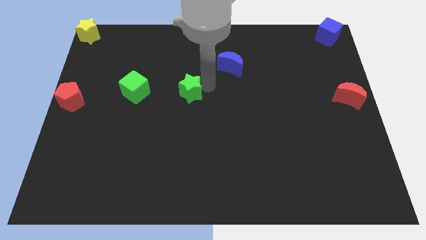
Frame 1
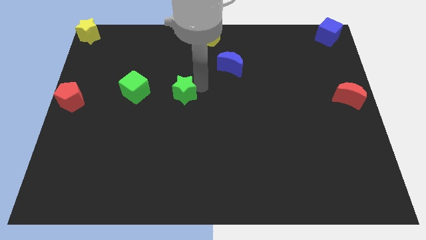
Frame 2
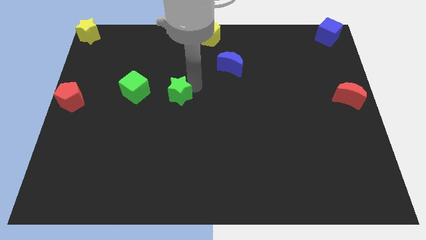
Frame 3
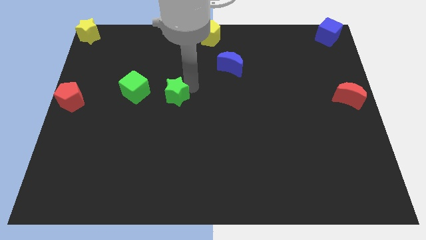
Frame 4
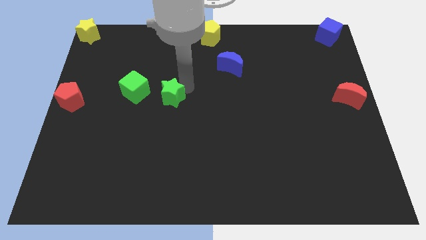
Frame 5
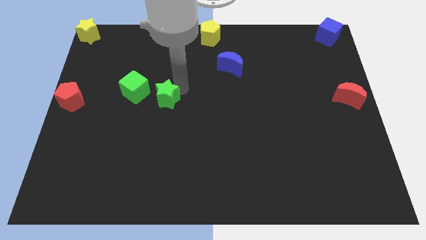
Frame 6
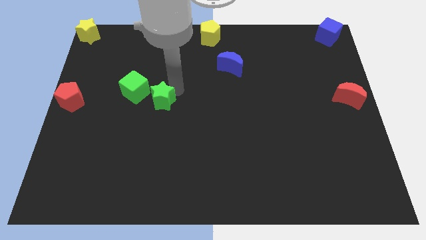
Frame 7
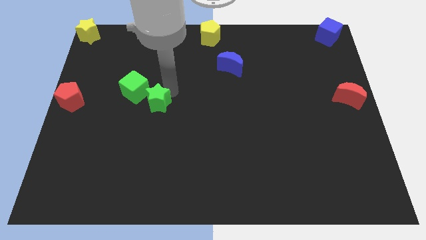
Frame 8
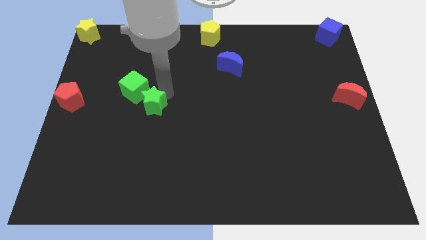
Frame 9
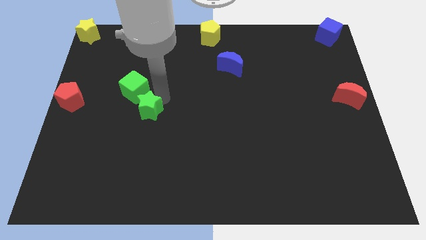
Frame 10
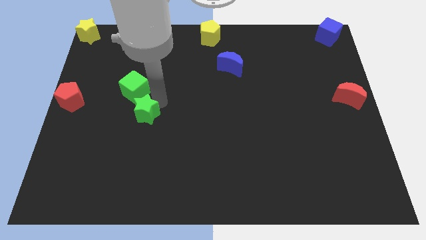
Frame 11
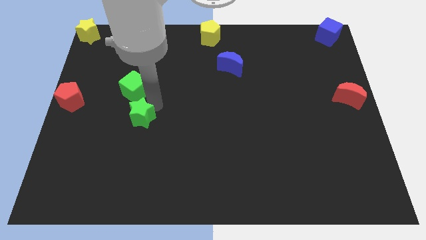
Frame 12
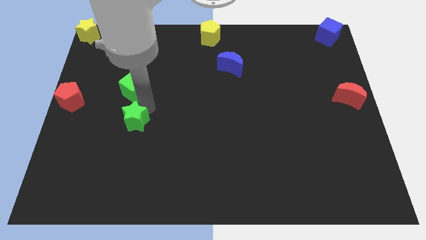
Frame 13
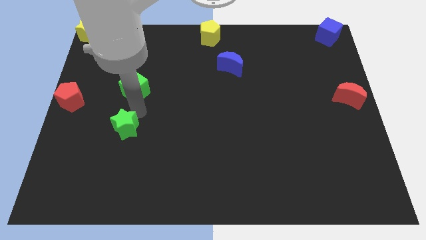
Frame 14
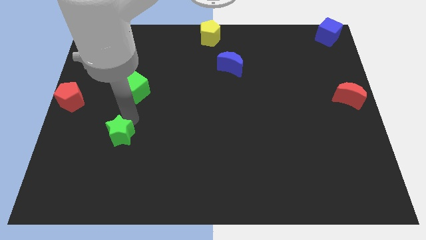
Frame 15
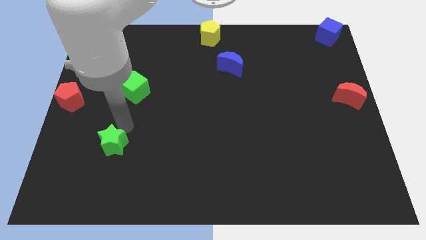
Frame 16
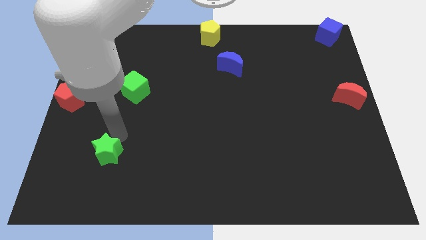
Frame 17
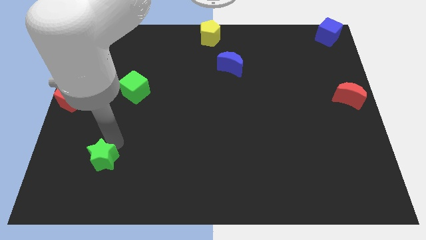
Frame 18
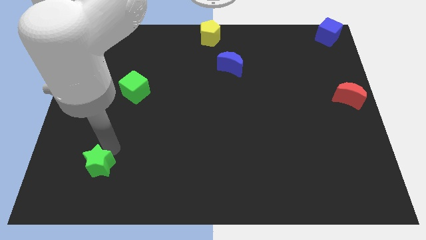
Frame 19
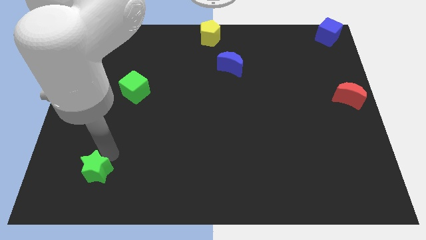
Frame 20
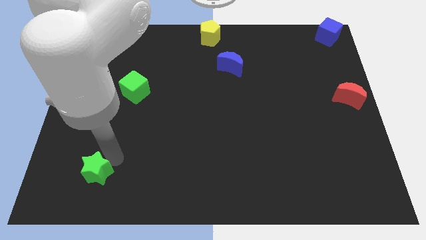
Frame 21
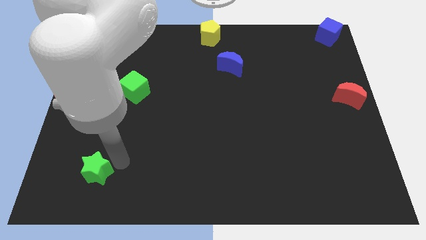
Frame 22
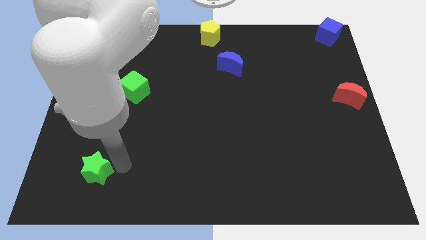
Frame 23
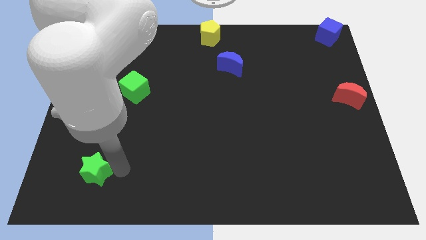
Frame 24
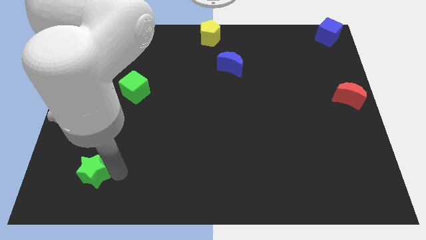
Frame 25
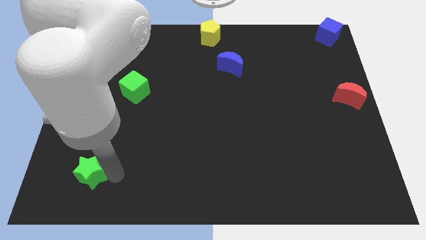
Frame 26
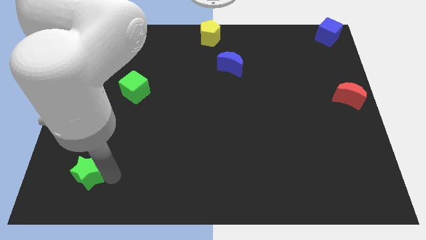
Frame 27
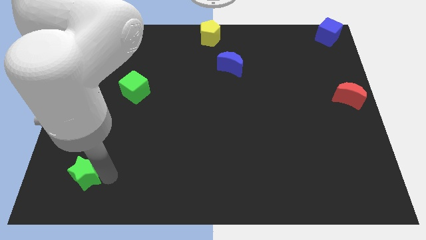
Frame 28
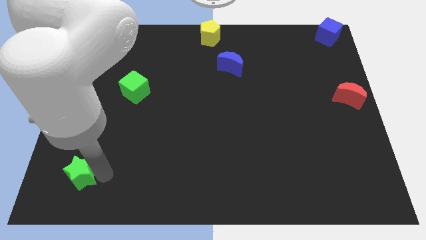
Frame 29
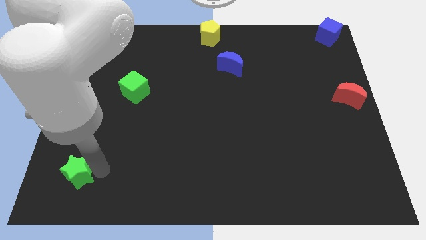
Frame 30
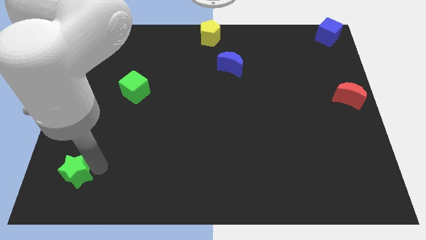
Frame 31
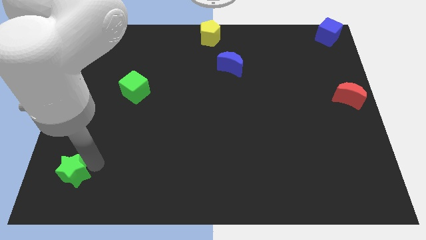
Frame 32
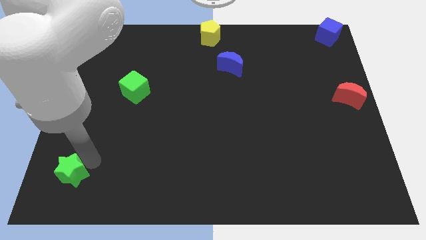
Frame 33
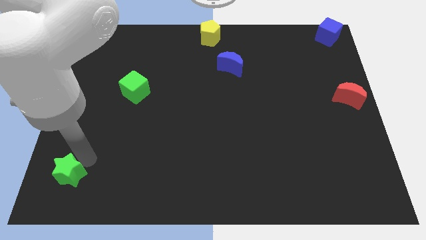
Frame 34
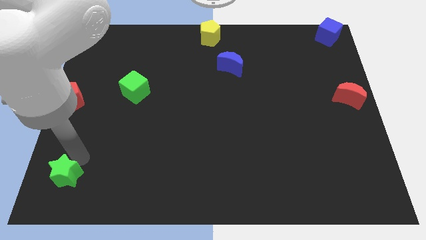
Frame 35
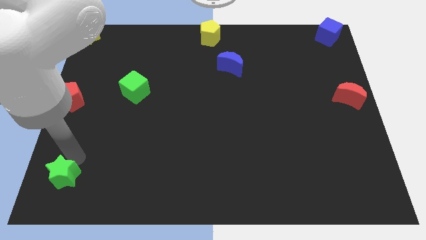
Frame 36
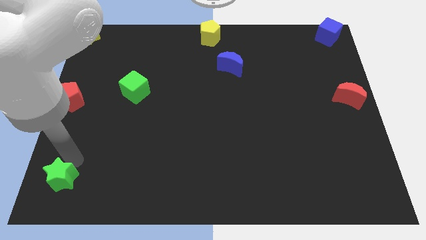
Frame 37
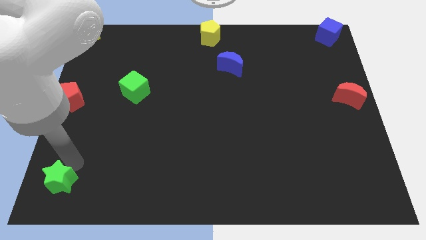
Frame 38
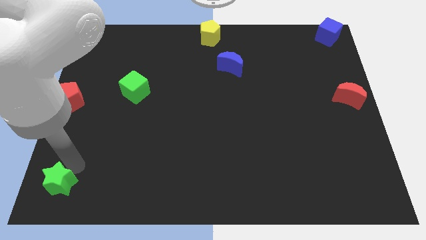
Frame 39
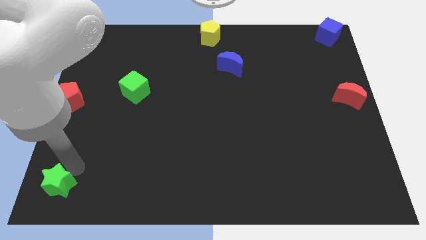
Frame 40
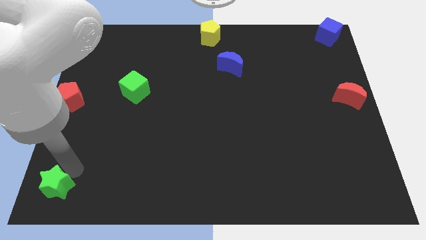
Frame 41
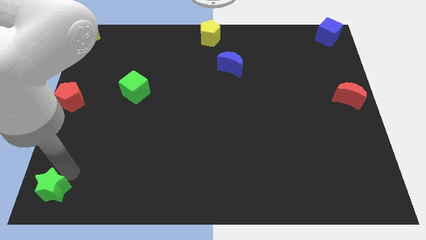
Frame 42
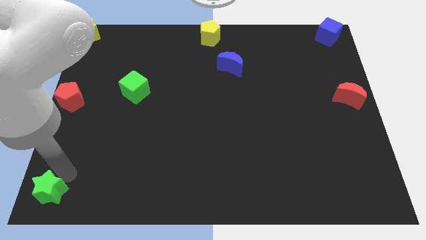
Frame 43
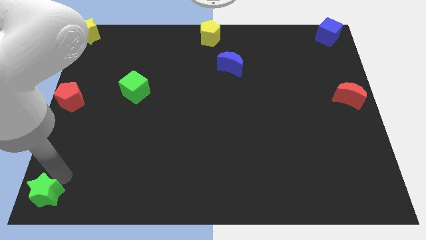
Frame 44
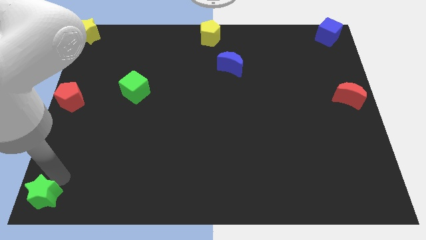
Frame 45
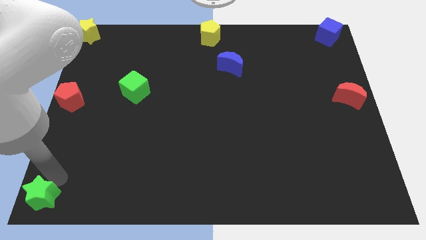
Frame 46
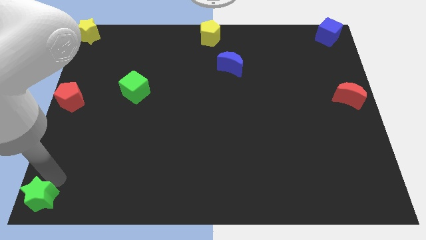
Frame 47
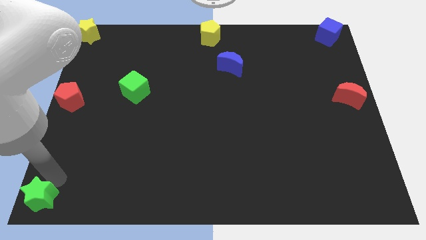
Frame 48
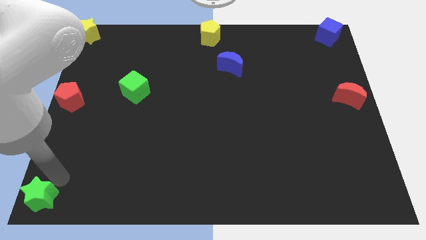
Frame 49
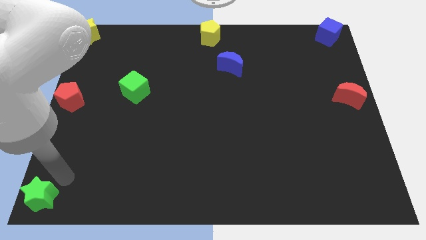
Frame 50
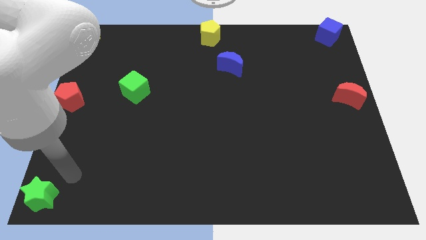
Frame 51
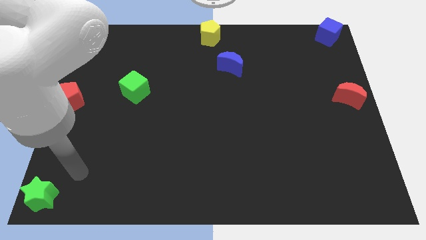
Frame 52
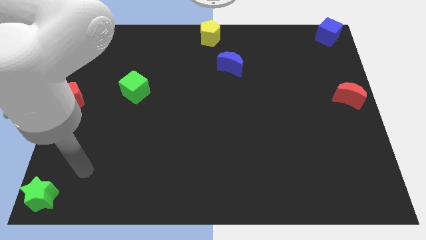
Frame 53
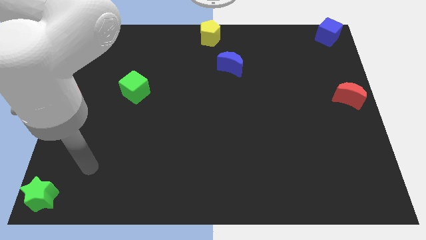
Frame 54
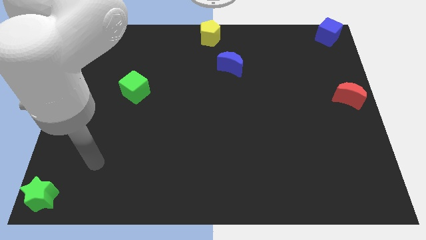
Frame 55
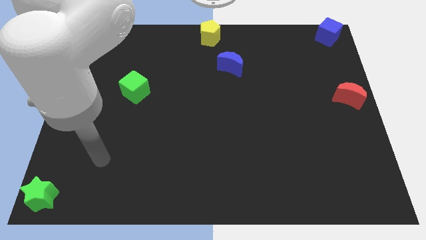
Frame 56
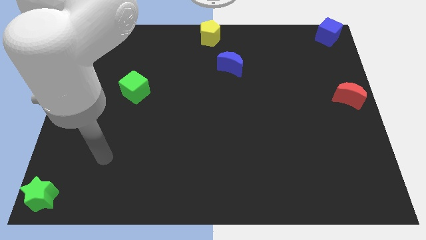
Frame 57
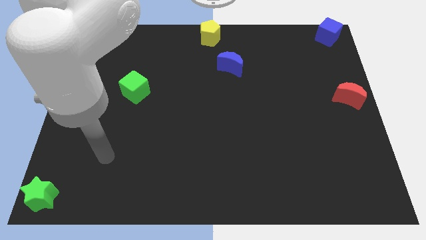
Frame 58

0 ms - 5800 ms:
move the green star to the bottom left corner of the board

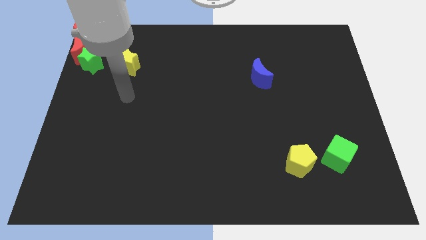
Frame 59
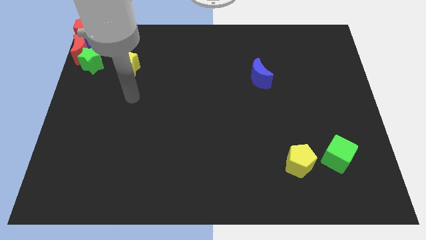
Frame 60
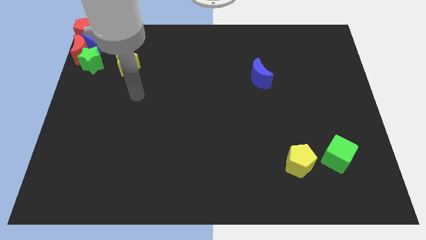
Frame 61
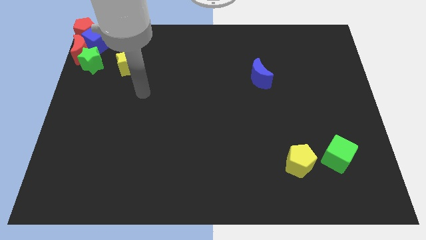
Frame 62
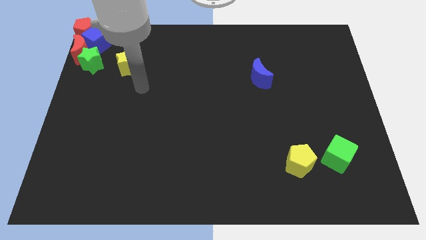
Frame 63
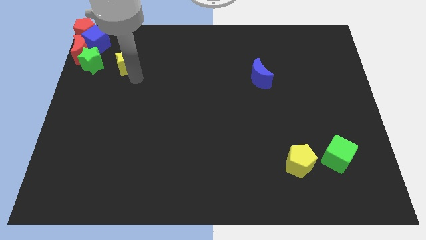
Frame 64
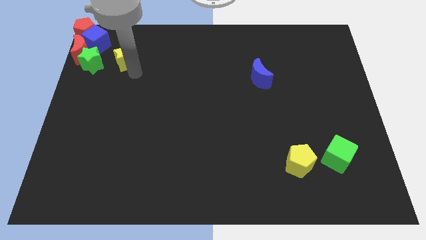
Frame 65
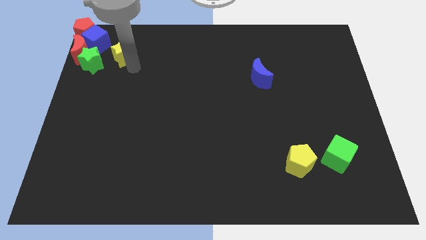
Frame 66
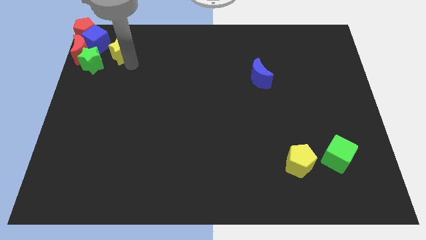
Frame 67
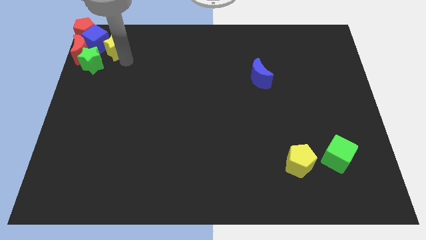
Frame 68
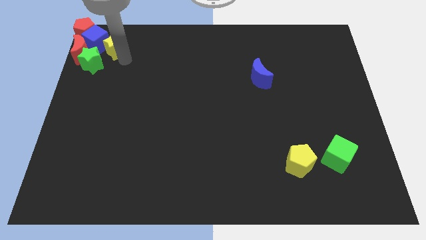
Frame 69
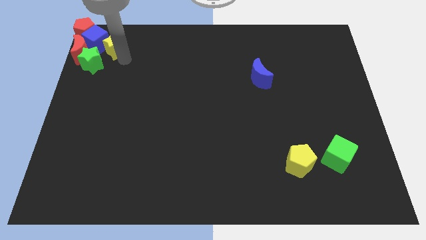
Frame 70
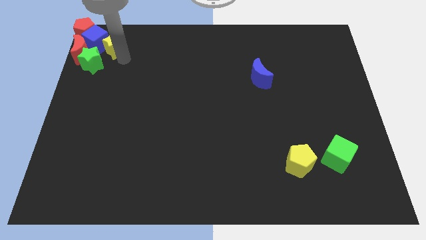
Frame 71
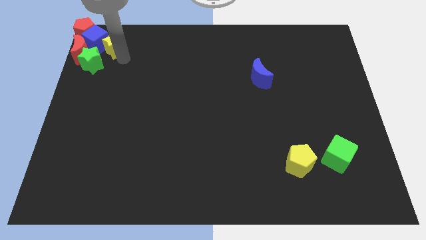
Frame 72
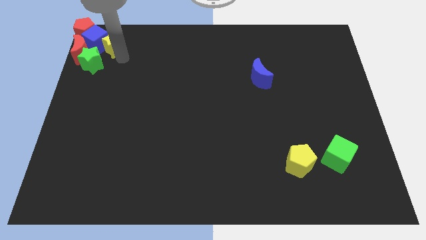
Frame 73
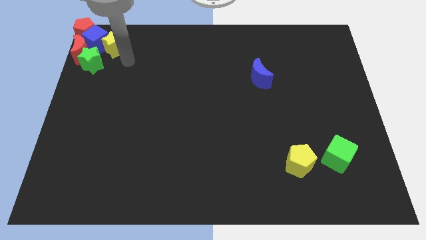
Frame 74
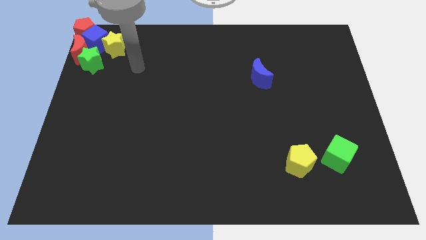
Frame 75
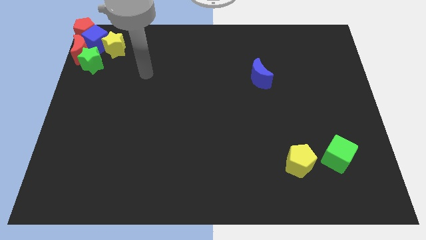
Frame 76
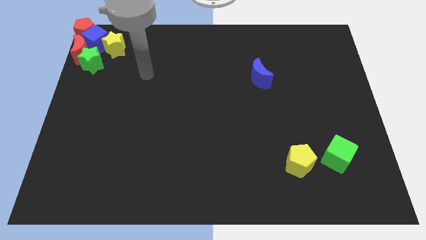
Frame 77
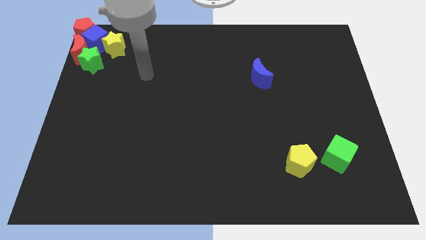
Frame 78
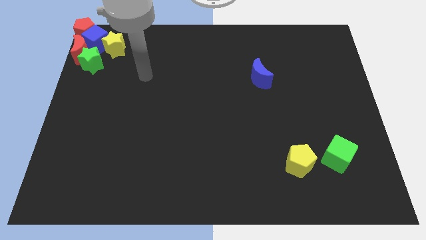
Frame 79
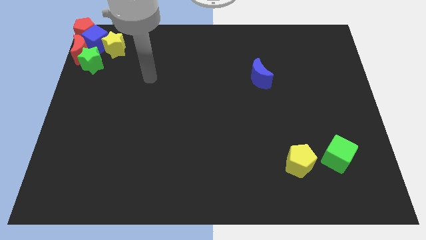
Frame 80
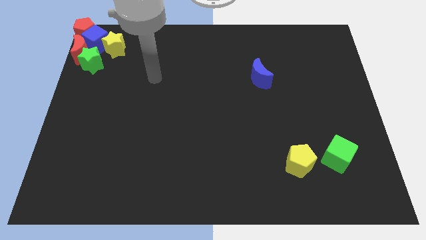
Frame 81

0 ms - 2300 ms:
move yellow star to the right of blue cube

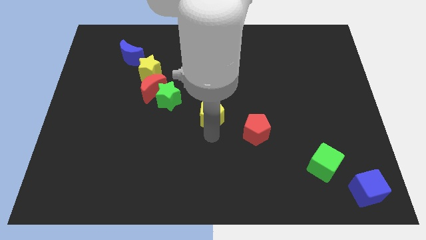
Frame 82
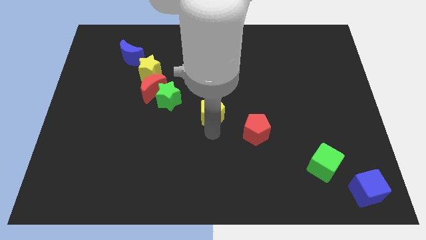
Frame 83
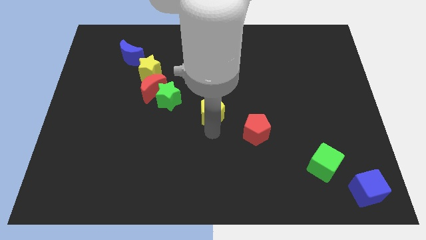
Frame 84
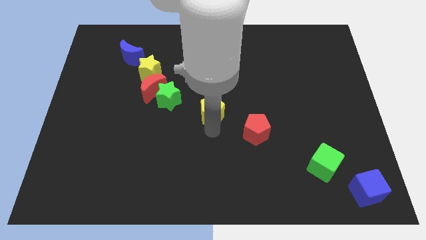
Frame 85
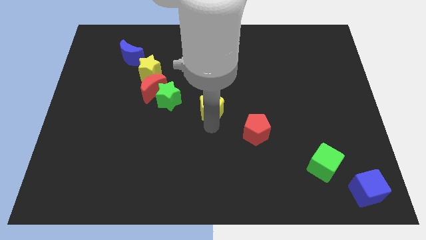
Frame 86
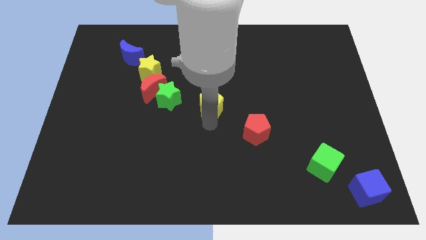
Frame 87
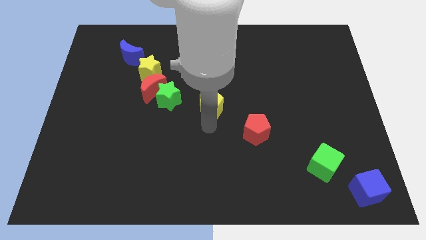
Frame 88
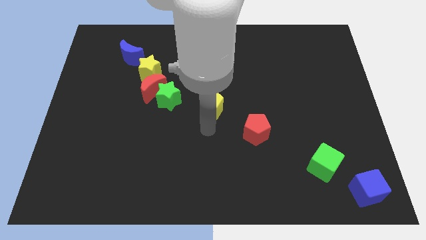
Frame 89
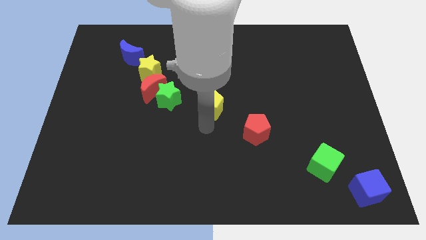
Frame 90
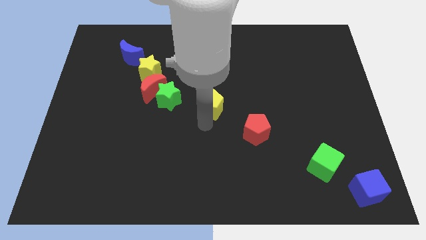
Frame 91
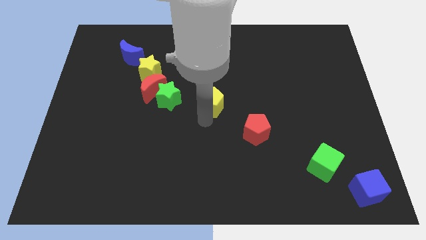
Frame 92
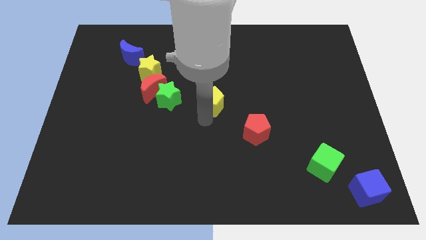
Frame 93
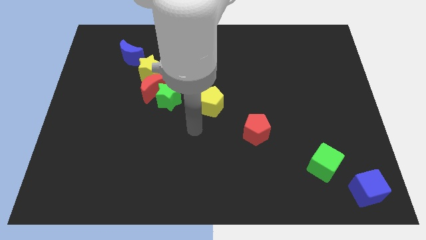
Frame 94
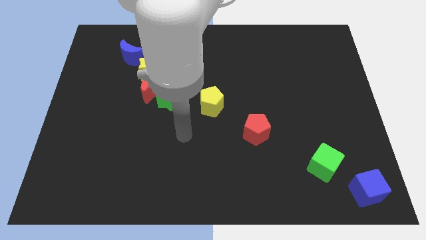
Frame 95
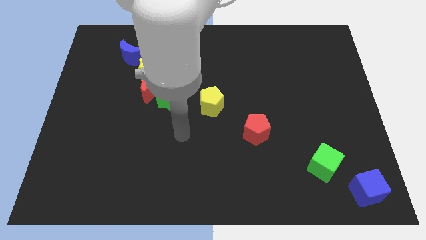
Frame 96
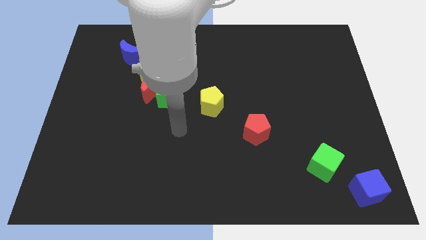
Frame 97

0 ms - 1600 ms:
move the yellow pentagon slightly up
